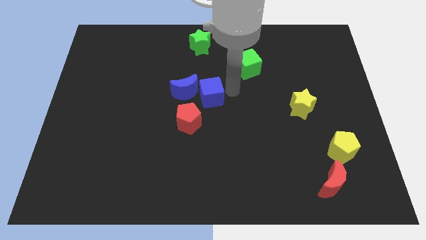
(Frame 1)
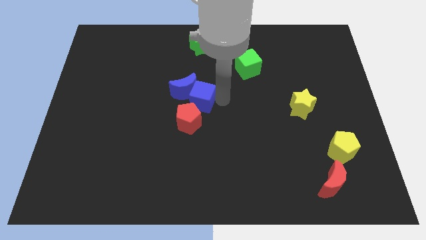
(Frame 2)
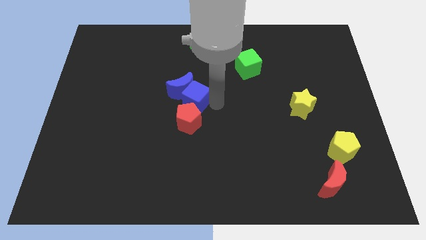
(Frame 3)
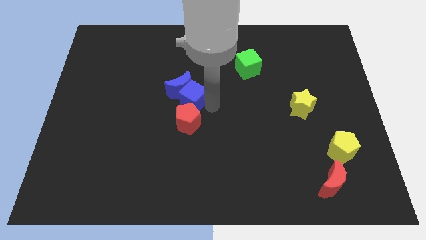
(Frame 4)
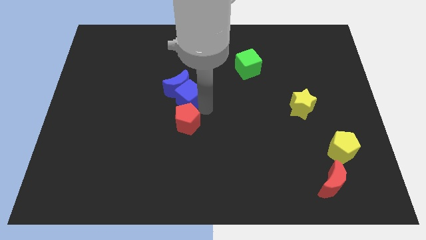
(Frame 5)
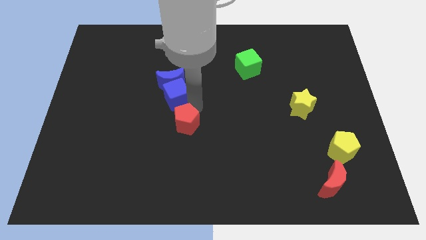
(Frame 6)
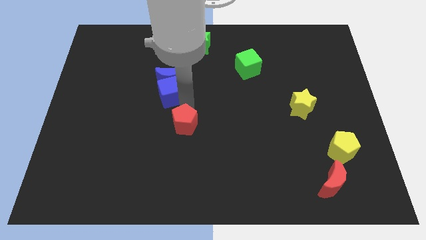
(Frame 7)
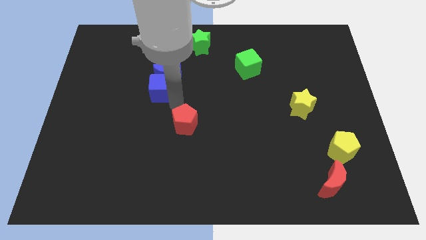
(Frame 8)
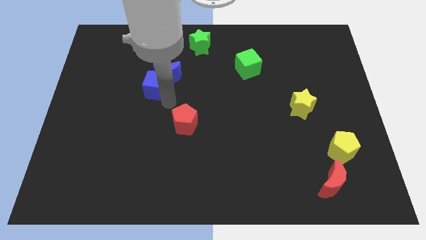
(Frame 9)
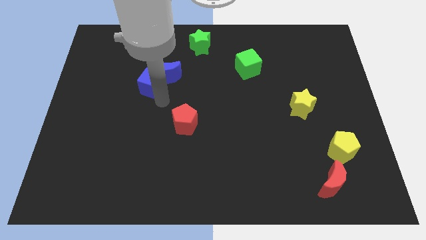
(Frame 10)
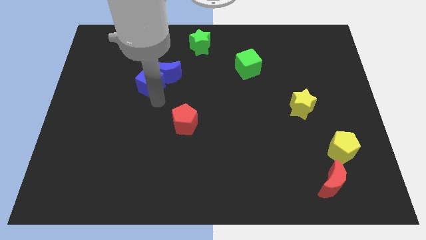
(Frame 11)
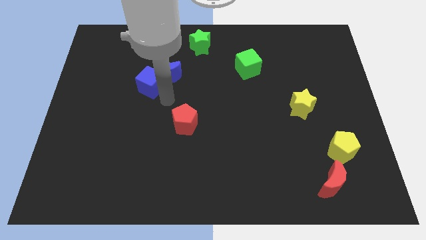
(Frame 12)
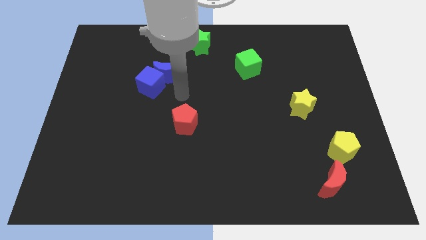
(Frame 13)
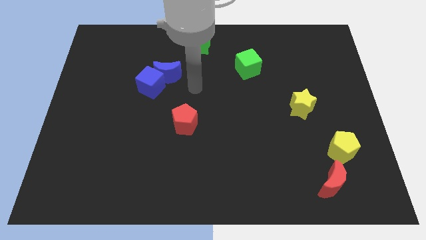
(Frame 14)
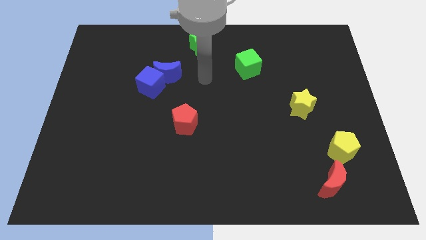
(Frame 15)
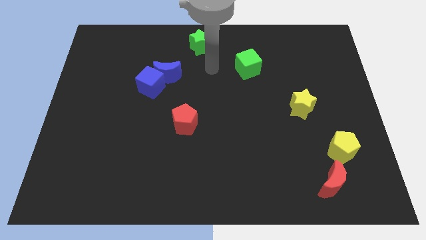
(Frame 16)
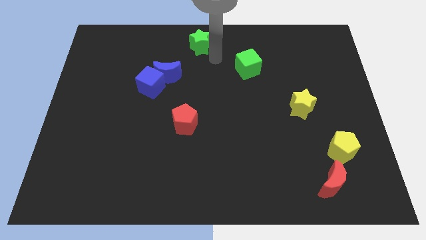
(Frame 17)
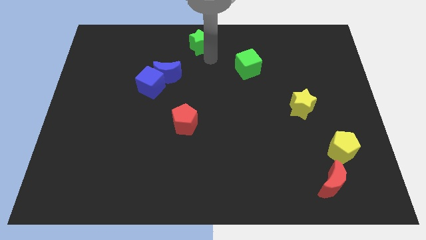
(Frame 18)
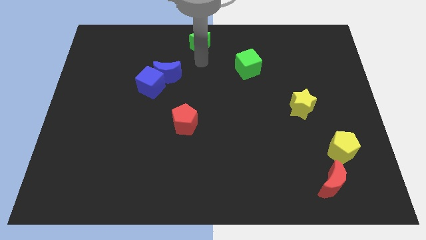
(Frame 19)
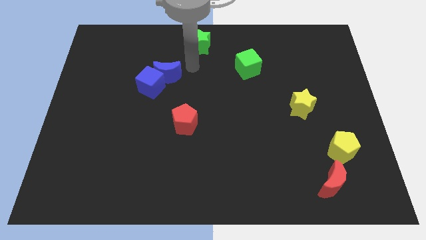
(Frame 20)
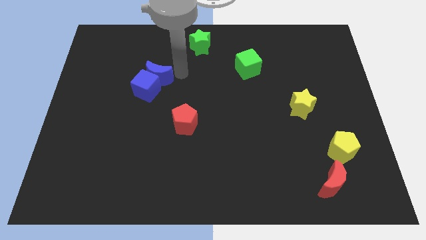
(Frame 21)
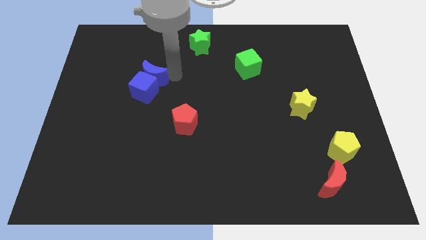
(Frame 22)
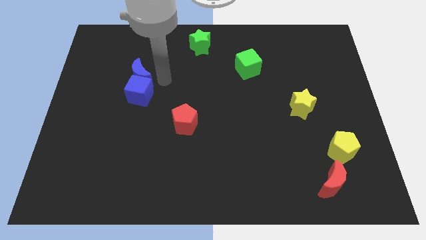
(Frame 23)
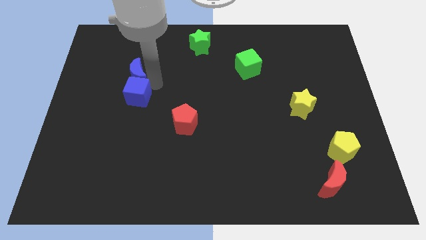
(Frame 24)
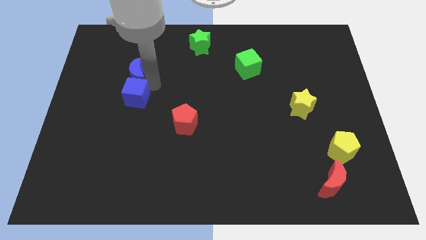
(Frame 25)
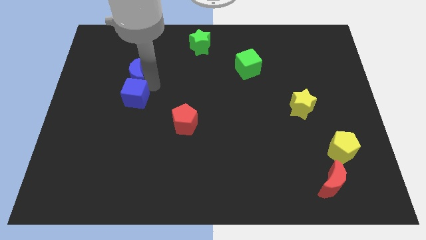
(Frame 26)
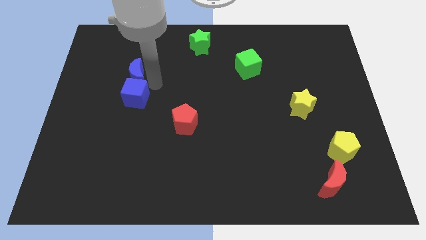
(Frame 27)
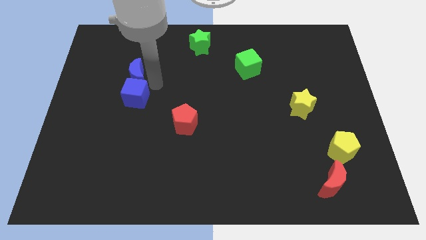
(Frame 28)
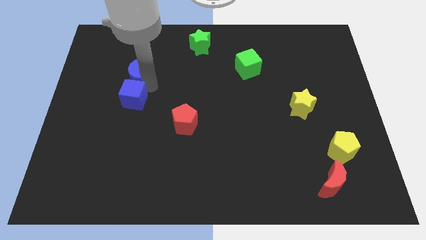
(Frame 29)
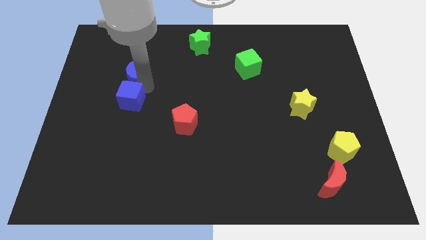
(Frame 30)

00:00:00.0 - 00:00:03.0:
push the blue blocks to the left of the board

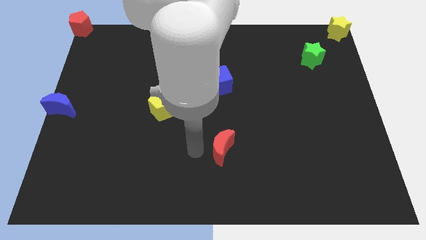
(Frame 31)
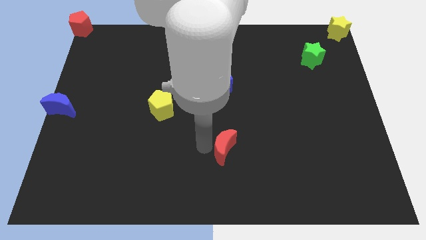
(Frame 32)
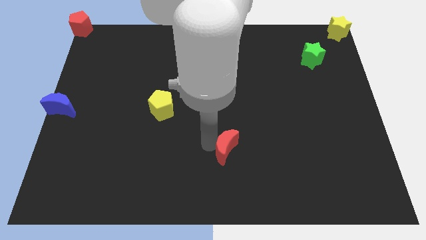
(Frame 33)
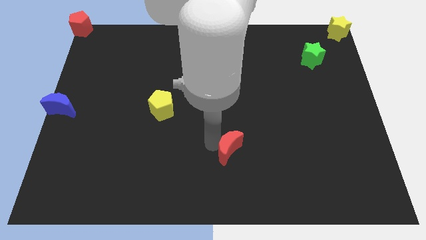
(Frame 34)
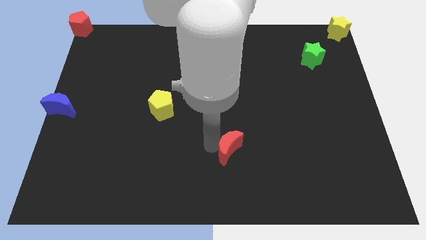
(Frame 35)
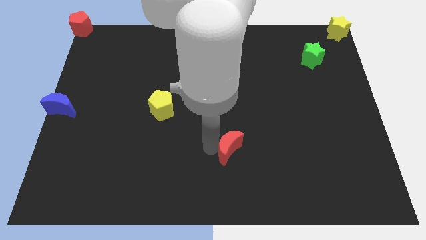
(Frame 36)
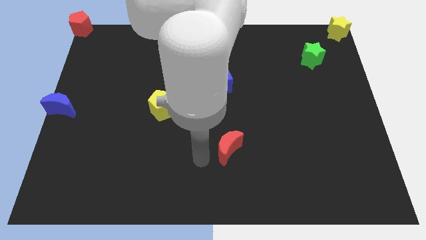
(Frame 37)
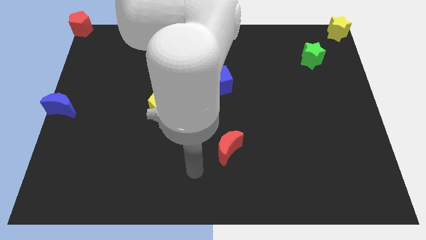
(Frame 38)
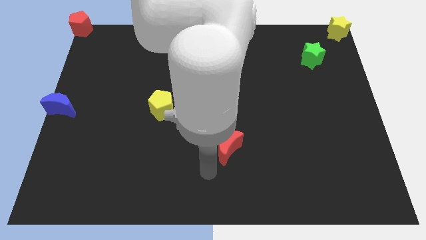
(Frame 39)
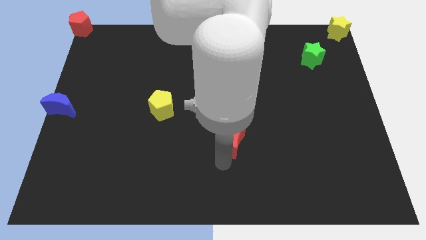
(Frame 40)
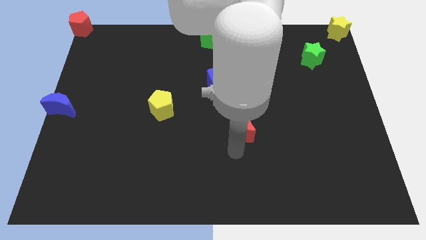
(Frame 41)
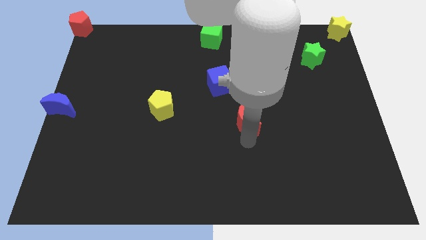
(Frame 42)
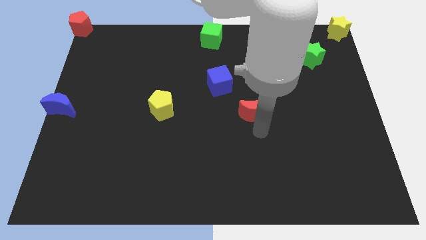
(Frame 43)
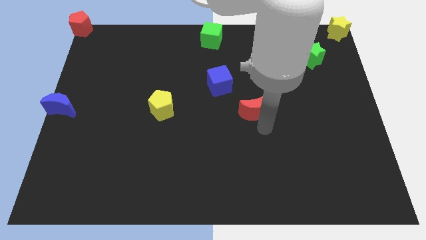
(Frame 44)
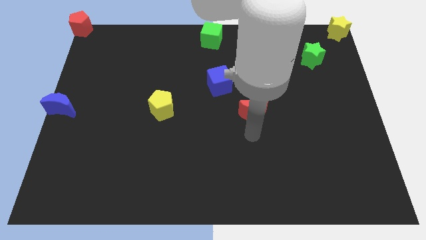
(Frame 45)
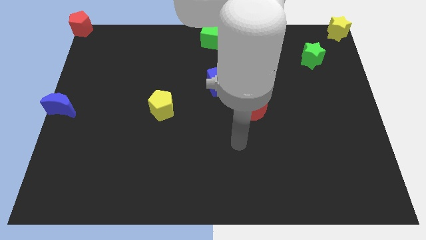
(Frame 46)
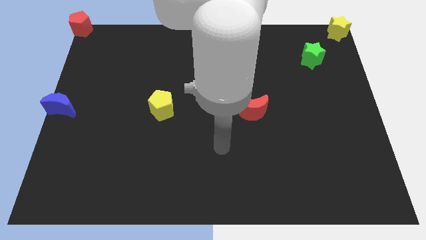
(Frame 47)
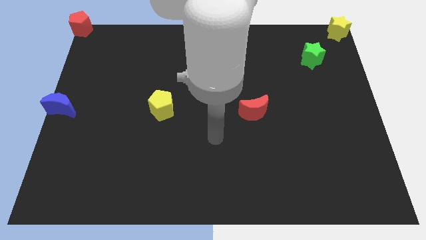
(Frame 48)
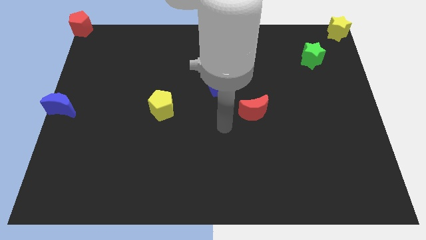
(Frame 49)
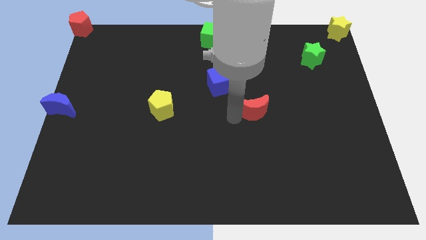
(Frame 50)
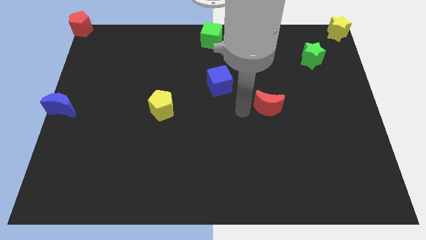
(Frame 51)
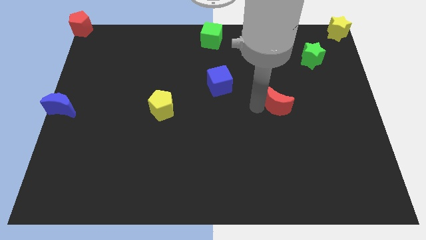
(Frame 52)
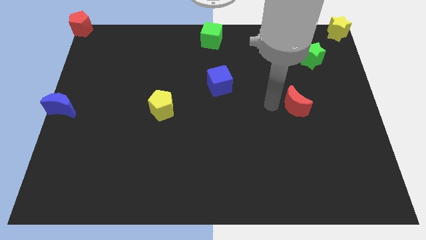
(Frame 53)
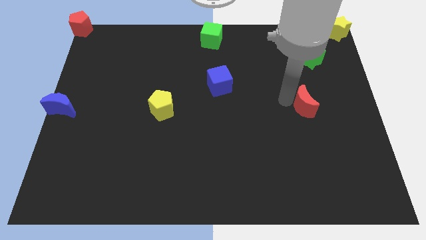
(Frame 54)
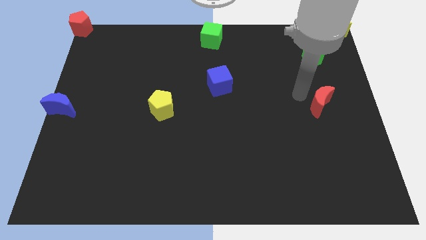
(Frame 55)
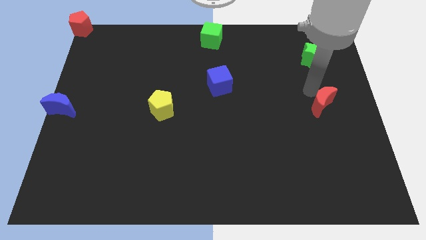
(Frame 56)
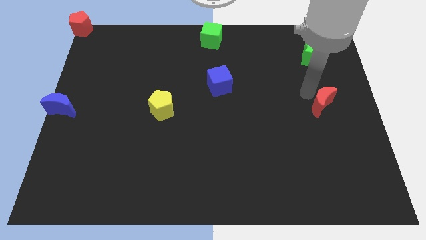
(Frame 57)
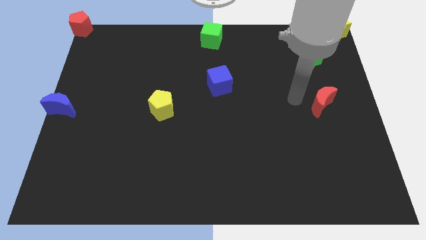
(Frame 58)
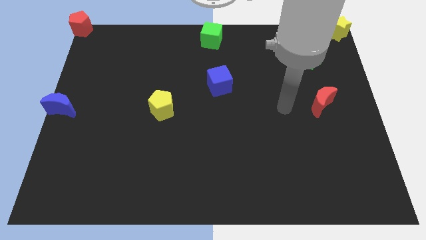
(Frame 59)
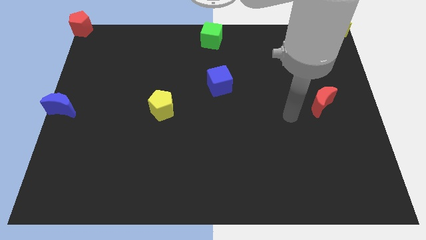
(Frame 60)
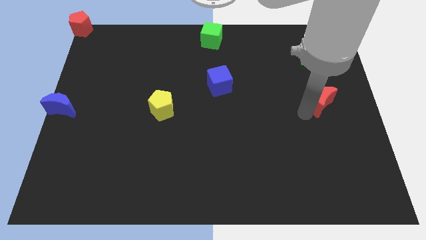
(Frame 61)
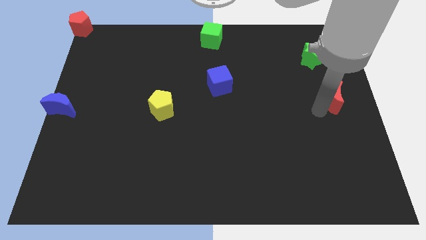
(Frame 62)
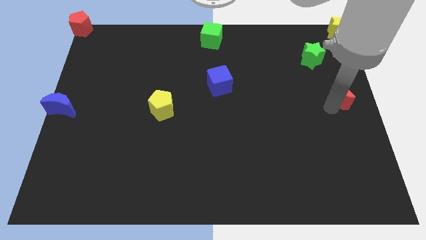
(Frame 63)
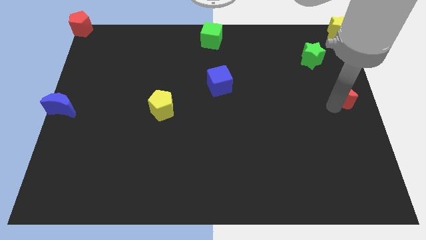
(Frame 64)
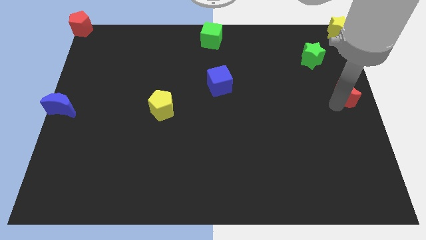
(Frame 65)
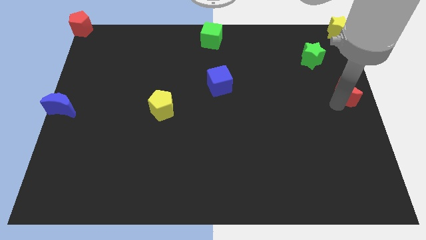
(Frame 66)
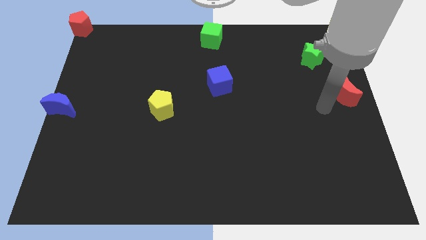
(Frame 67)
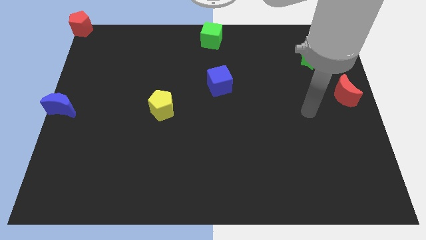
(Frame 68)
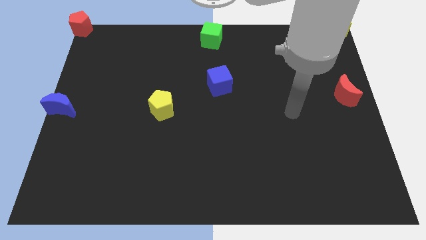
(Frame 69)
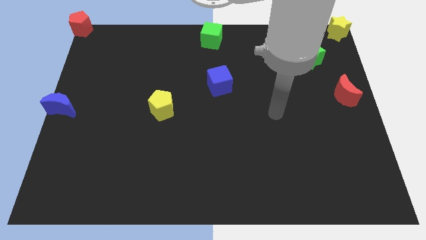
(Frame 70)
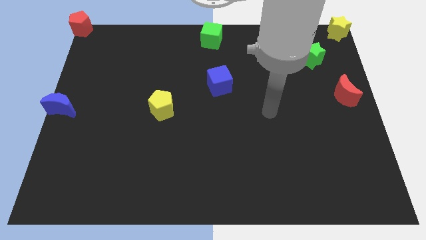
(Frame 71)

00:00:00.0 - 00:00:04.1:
push the red moon to the center right of the board

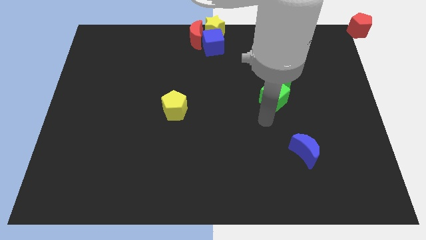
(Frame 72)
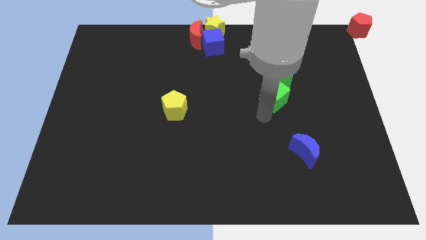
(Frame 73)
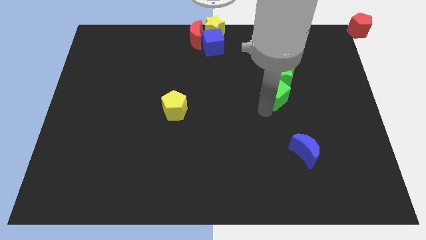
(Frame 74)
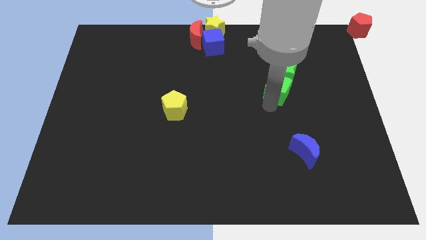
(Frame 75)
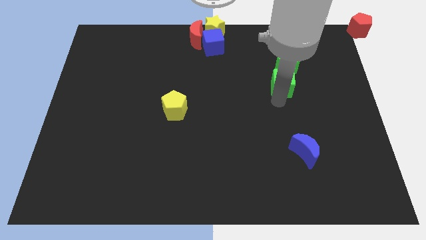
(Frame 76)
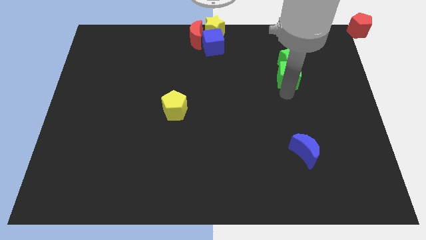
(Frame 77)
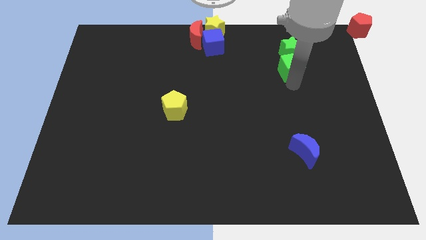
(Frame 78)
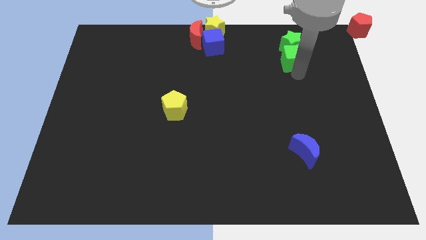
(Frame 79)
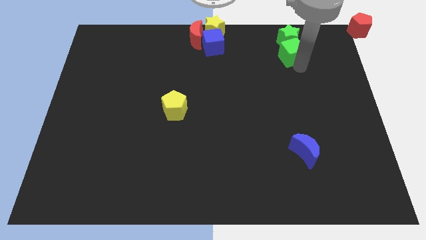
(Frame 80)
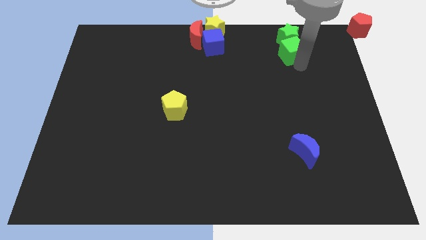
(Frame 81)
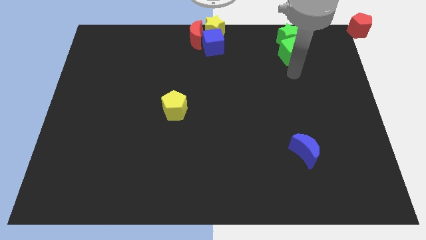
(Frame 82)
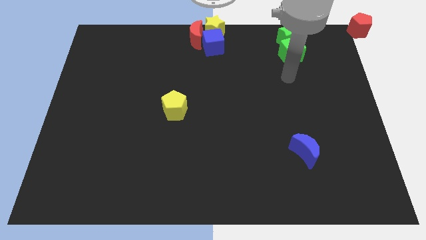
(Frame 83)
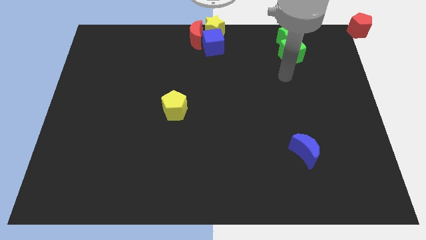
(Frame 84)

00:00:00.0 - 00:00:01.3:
move the group of green blocks to the top

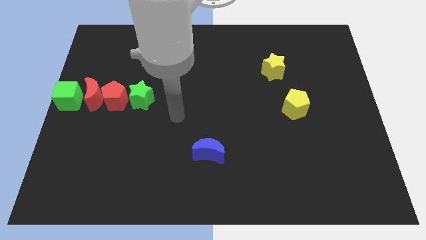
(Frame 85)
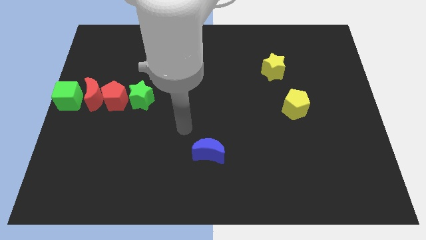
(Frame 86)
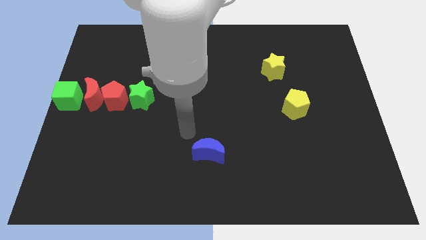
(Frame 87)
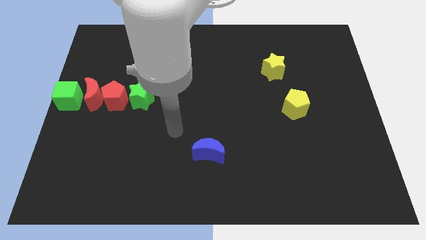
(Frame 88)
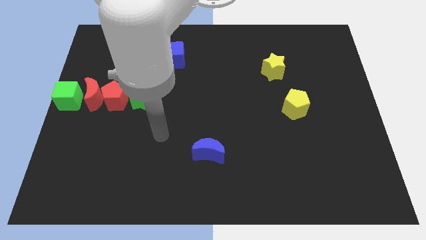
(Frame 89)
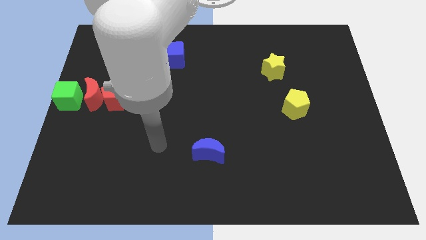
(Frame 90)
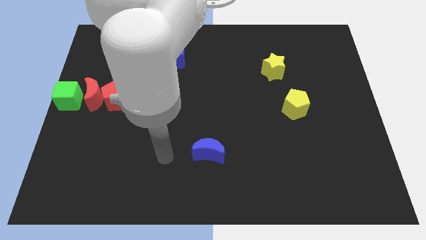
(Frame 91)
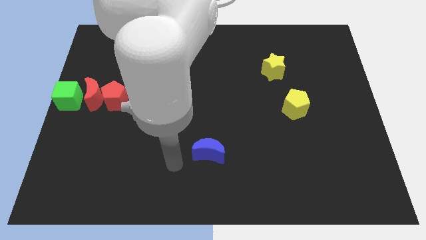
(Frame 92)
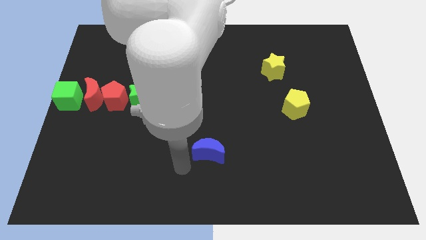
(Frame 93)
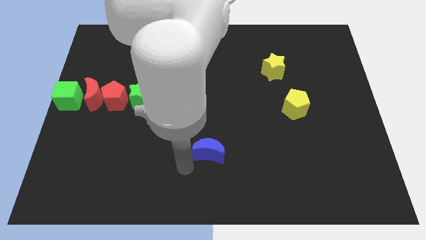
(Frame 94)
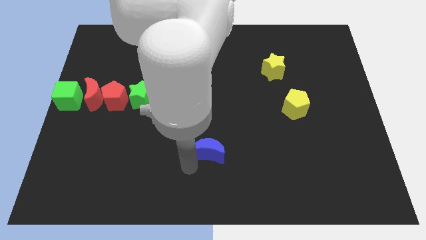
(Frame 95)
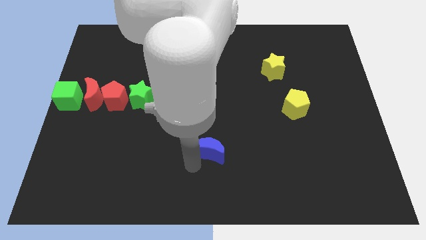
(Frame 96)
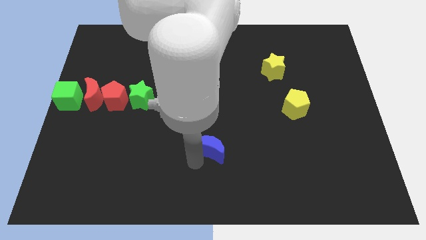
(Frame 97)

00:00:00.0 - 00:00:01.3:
touch the blue moon at the bottom
